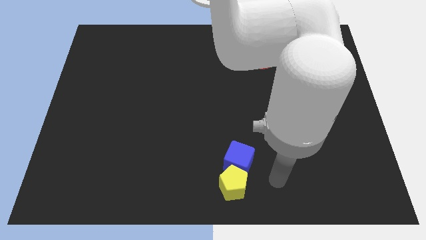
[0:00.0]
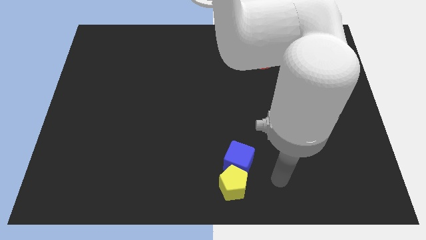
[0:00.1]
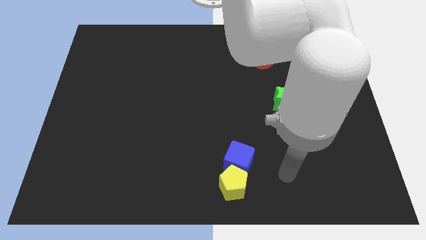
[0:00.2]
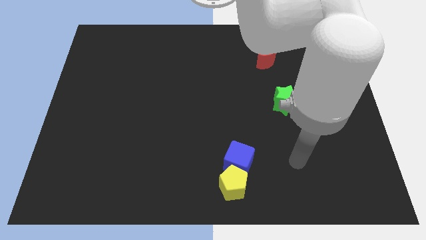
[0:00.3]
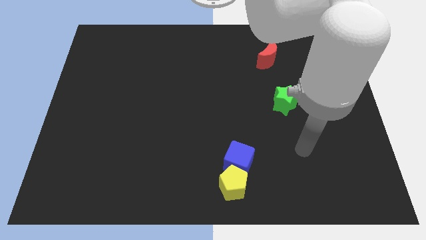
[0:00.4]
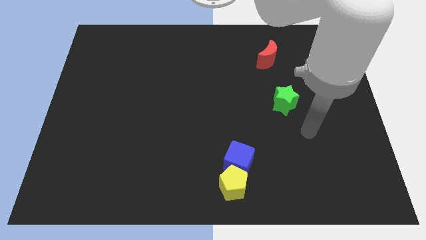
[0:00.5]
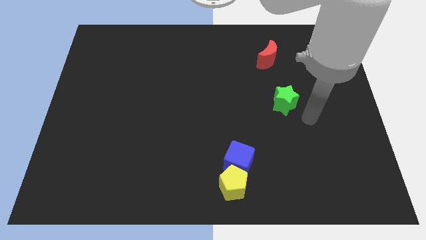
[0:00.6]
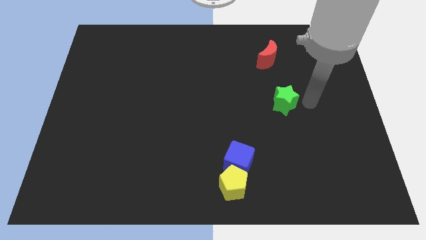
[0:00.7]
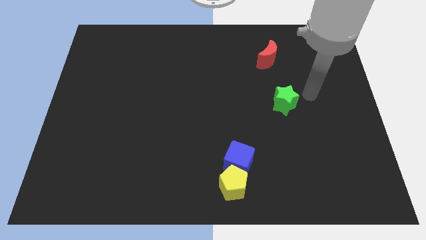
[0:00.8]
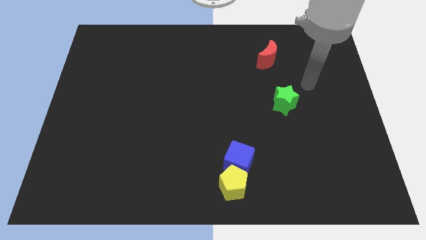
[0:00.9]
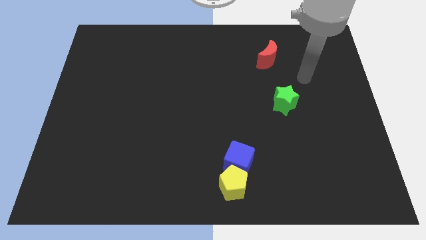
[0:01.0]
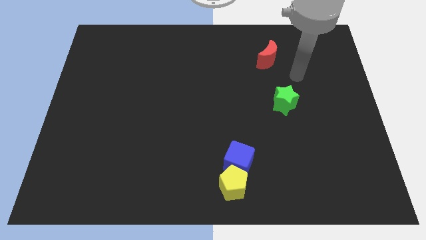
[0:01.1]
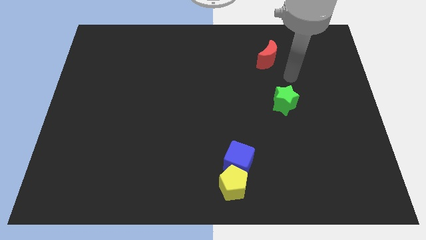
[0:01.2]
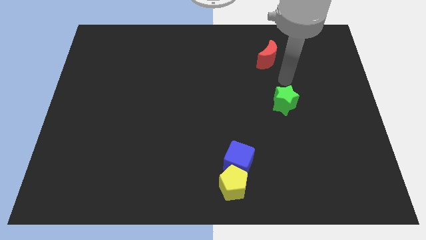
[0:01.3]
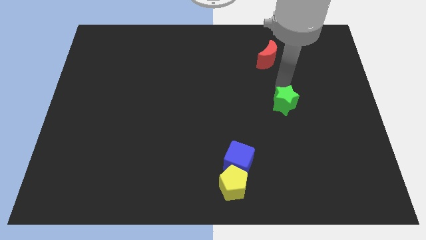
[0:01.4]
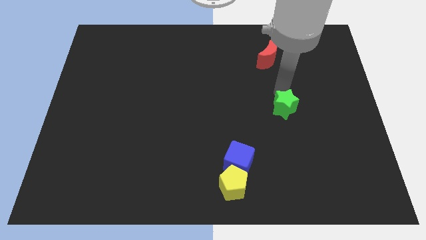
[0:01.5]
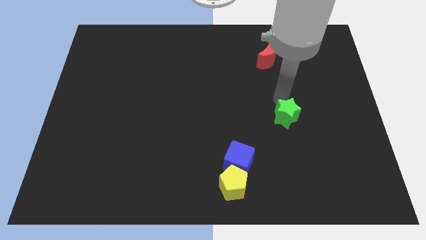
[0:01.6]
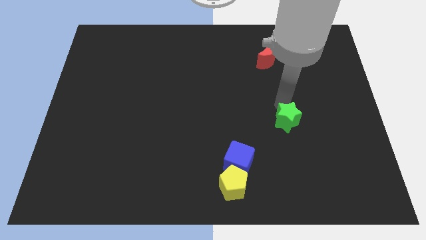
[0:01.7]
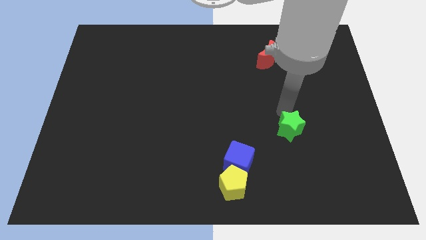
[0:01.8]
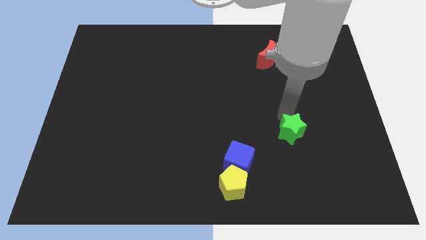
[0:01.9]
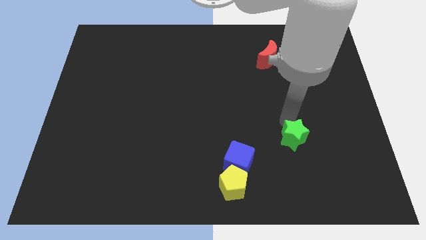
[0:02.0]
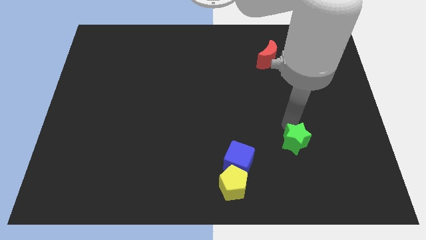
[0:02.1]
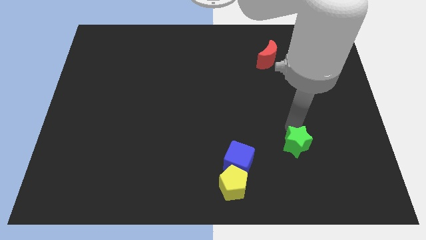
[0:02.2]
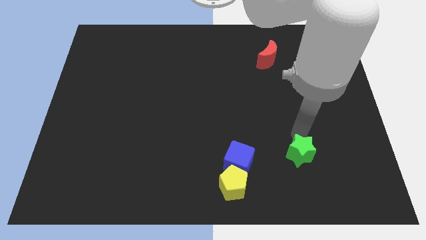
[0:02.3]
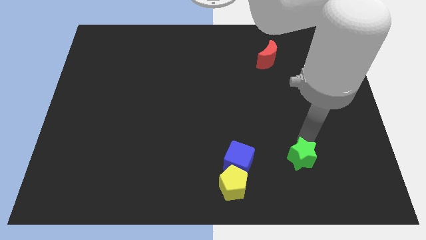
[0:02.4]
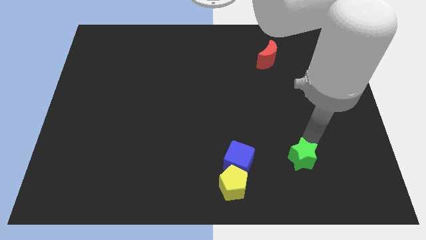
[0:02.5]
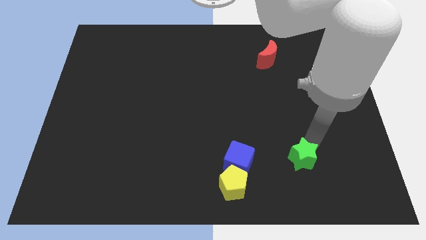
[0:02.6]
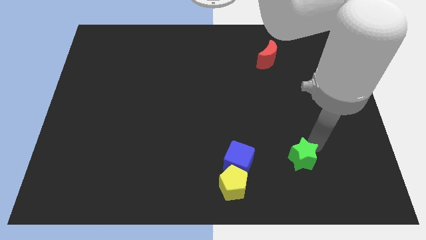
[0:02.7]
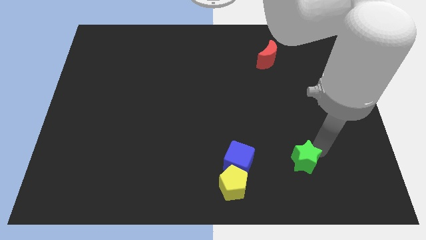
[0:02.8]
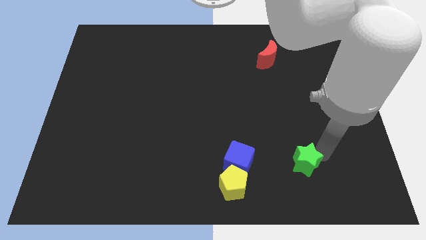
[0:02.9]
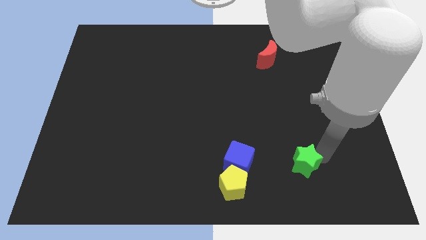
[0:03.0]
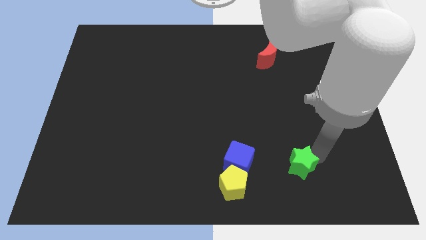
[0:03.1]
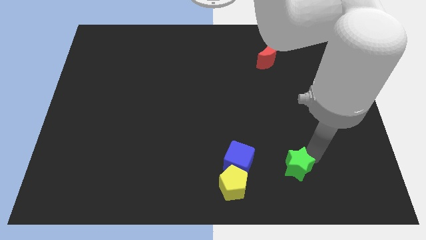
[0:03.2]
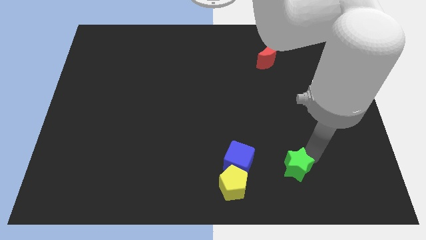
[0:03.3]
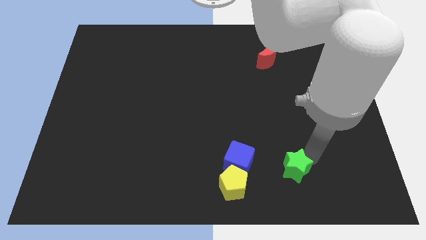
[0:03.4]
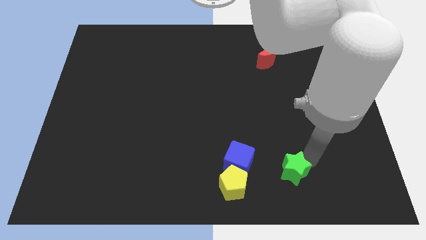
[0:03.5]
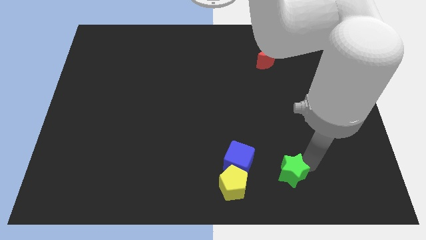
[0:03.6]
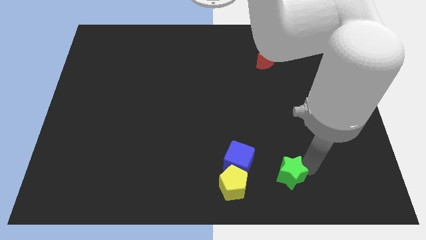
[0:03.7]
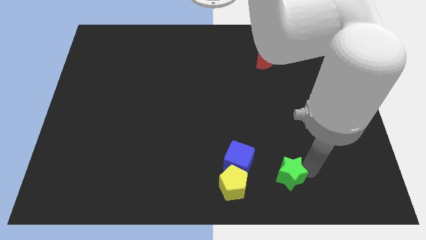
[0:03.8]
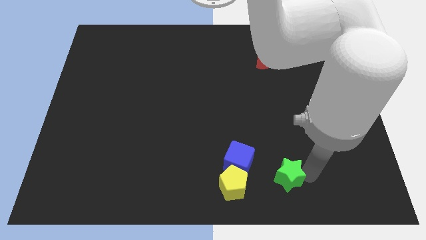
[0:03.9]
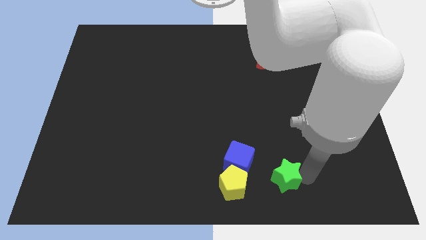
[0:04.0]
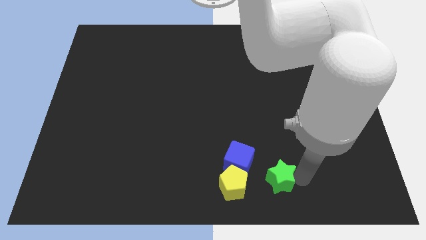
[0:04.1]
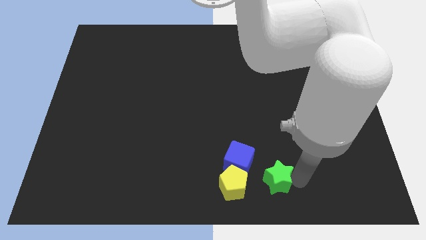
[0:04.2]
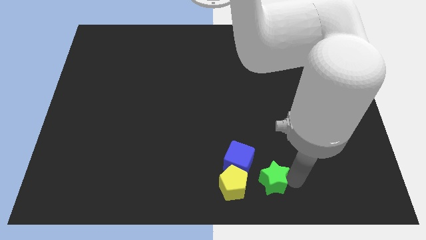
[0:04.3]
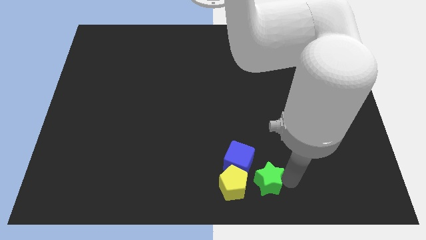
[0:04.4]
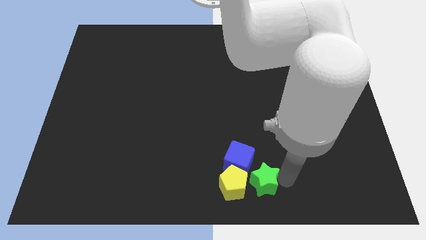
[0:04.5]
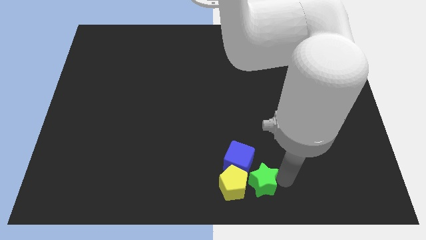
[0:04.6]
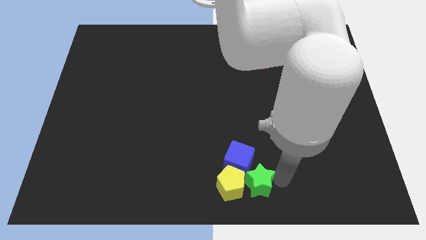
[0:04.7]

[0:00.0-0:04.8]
move the green star towards the yellow block

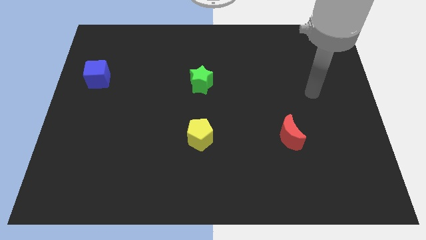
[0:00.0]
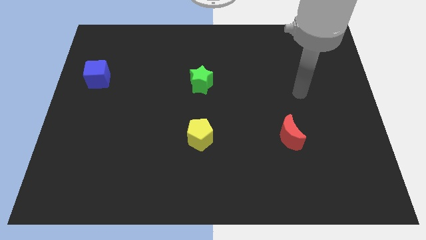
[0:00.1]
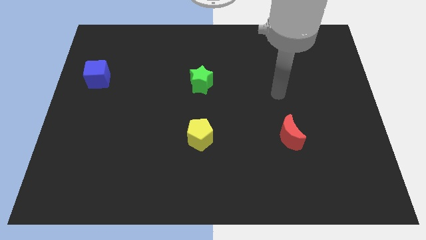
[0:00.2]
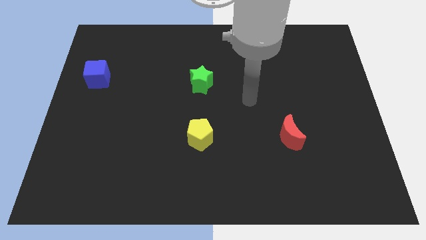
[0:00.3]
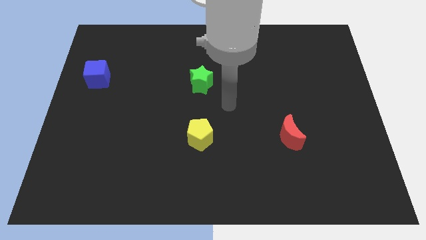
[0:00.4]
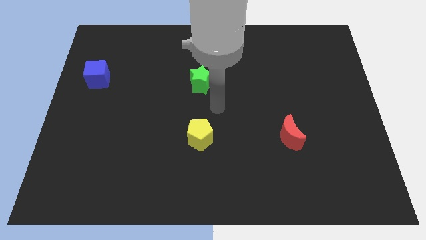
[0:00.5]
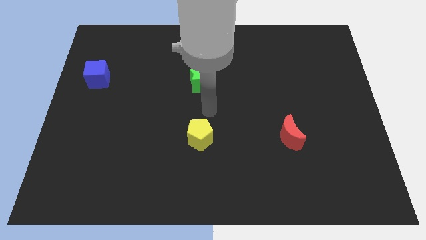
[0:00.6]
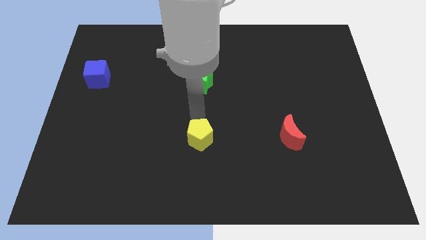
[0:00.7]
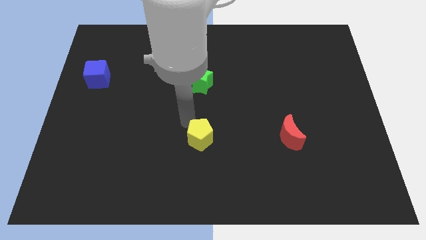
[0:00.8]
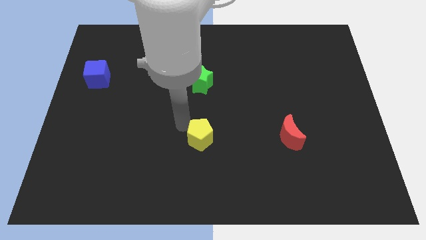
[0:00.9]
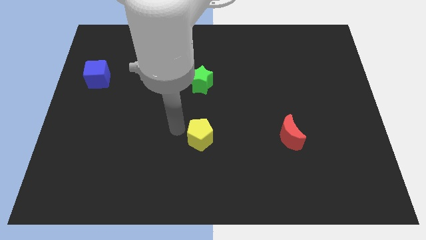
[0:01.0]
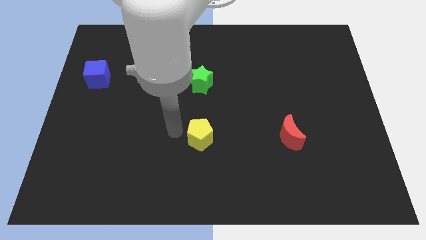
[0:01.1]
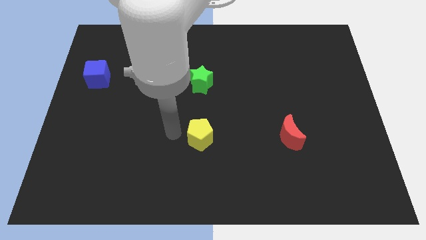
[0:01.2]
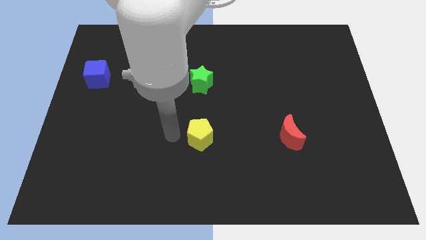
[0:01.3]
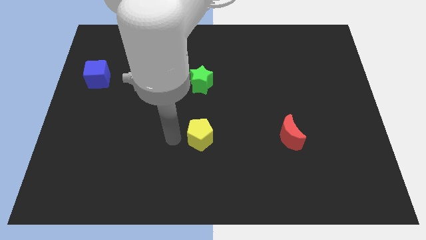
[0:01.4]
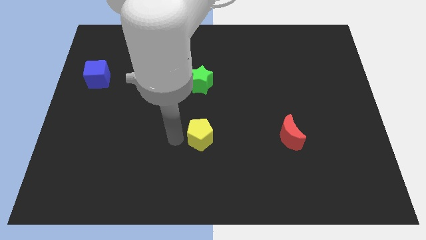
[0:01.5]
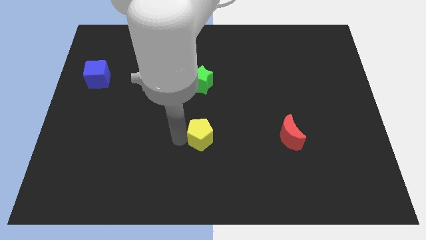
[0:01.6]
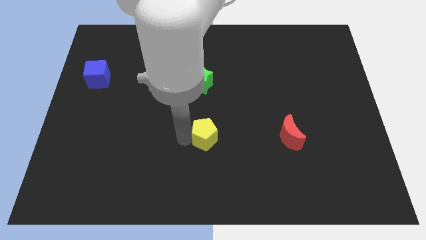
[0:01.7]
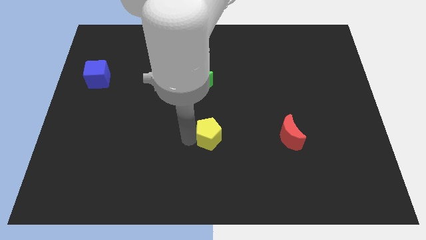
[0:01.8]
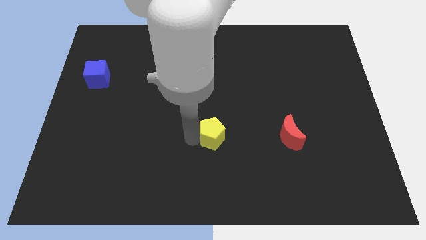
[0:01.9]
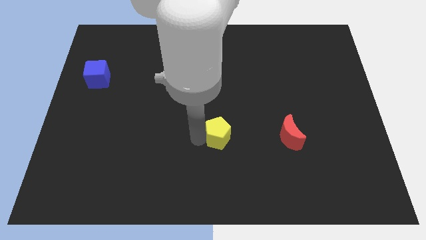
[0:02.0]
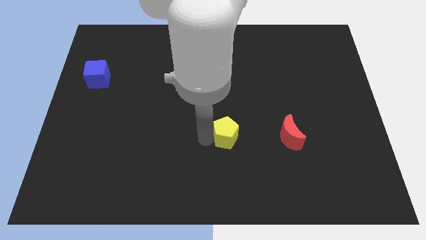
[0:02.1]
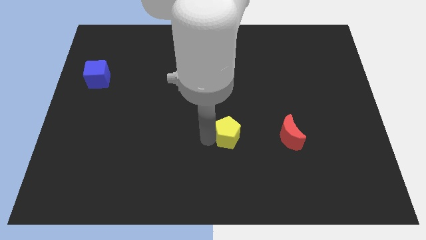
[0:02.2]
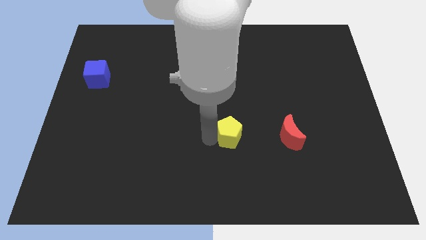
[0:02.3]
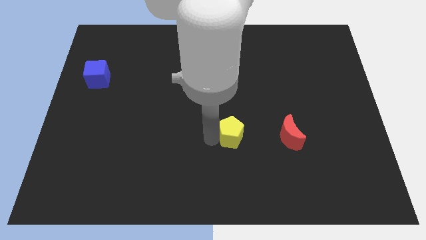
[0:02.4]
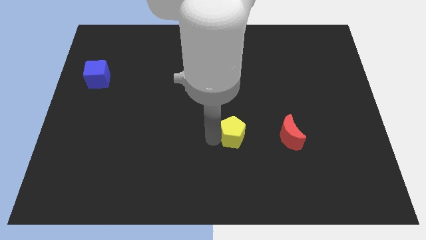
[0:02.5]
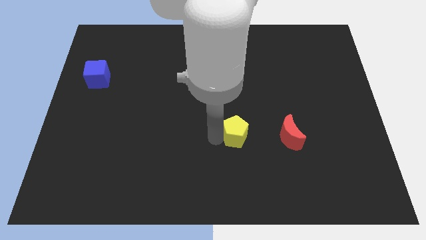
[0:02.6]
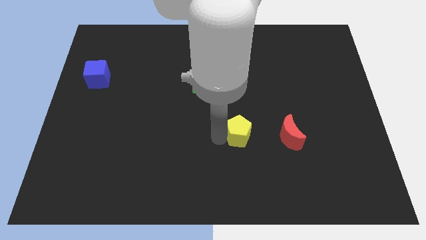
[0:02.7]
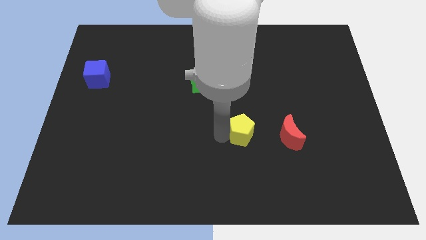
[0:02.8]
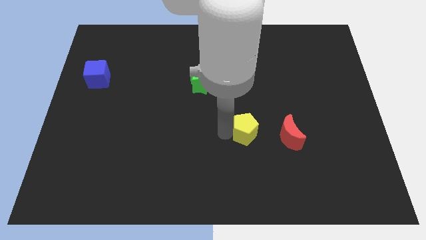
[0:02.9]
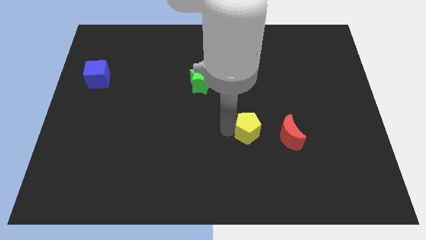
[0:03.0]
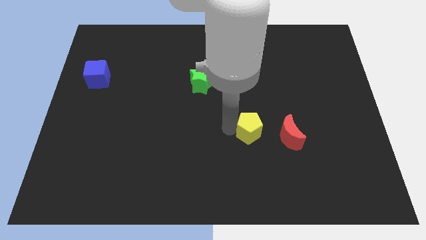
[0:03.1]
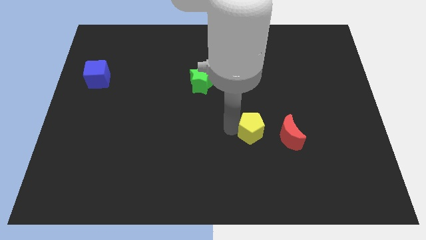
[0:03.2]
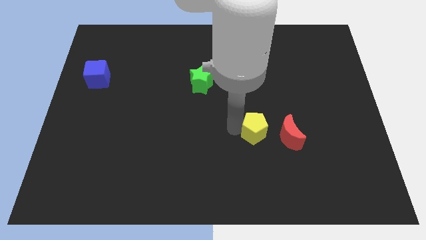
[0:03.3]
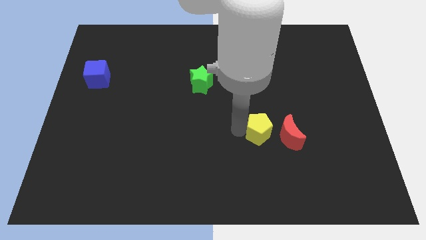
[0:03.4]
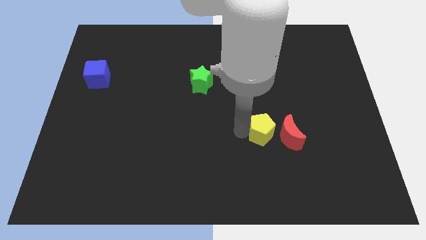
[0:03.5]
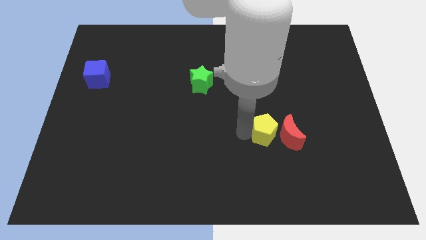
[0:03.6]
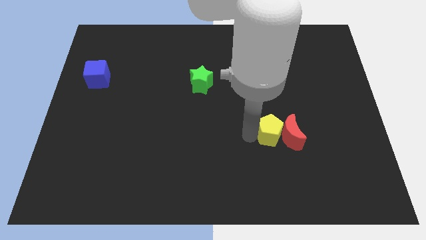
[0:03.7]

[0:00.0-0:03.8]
slide the yellow pentagon next to the red moon
